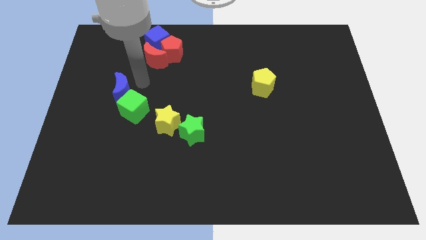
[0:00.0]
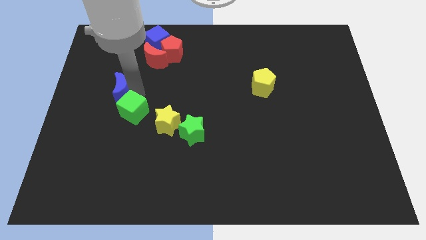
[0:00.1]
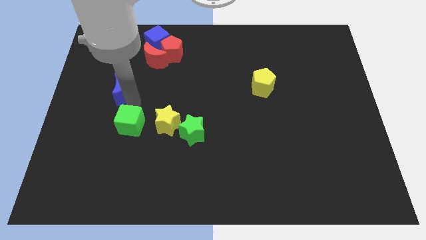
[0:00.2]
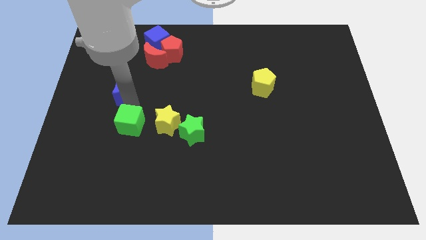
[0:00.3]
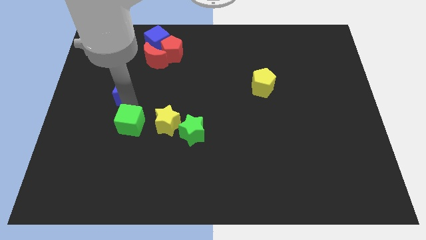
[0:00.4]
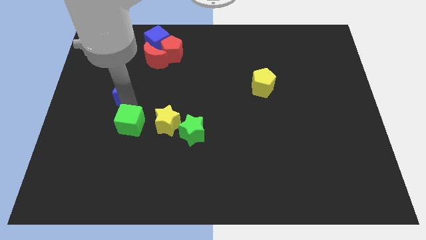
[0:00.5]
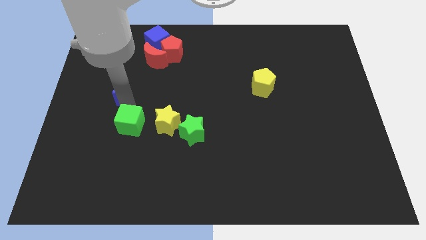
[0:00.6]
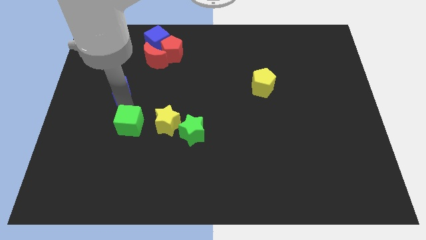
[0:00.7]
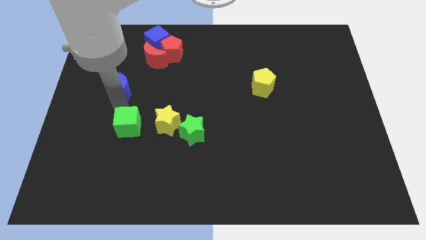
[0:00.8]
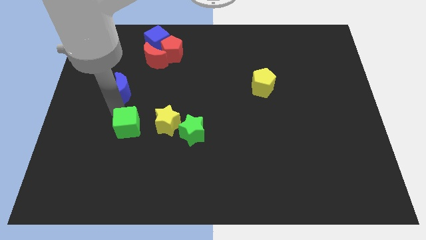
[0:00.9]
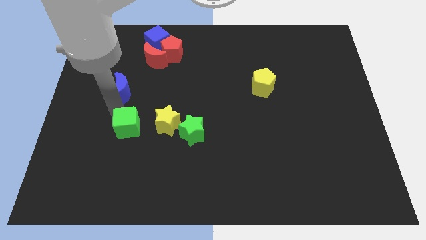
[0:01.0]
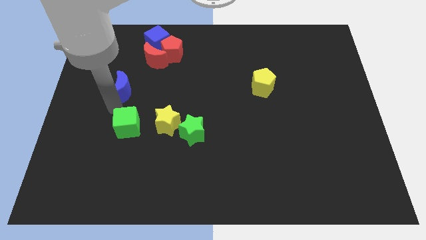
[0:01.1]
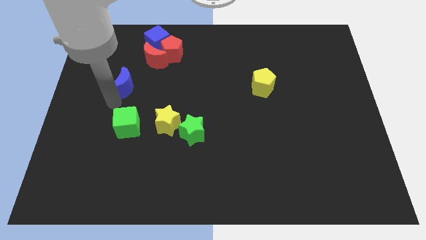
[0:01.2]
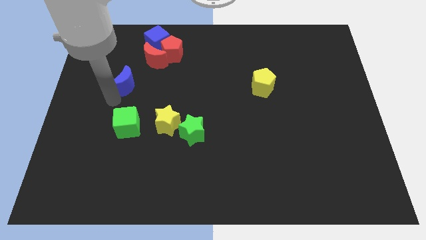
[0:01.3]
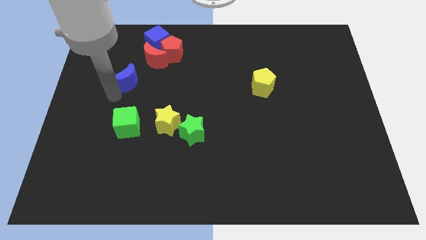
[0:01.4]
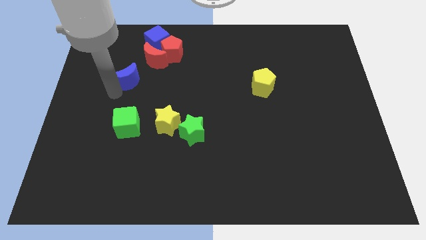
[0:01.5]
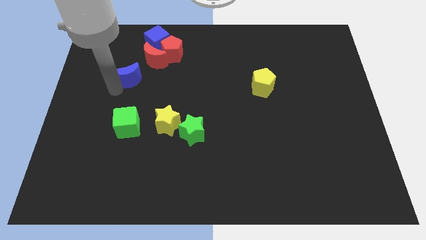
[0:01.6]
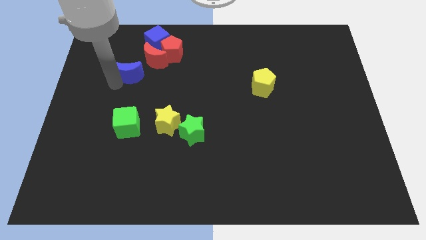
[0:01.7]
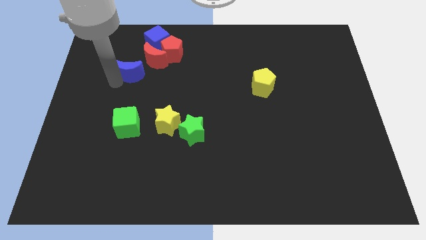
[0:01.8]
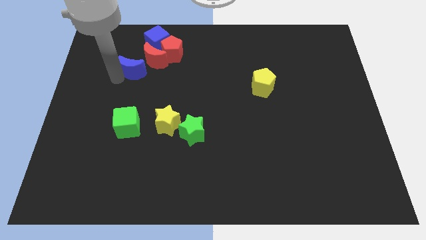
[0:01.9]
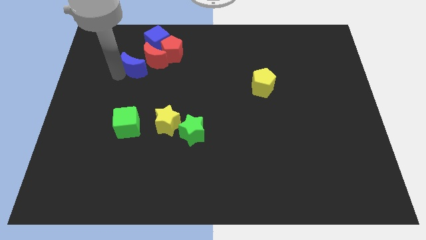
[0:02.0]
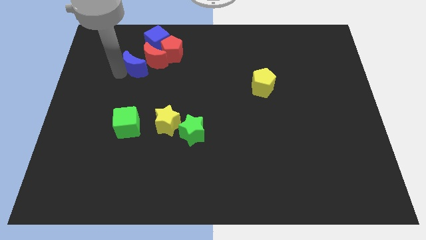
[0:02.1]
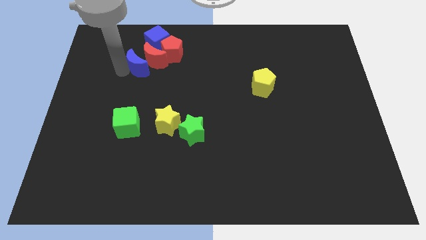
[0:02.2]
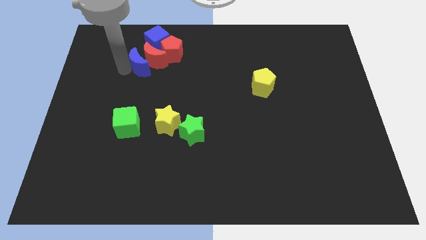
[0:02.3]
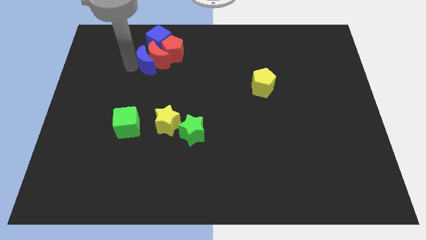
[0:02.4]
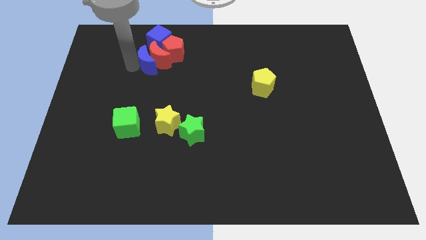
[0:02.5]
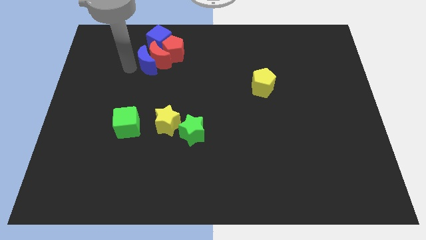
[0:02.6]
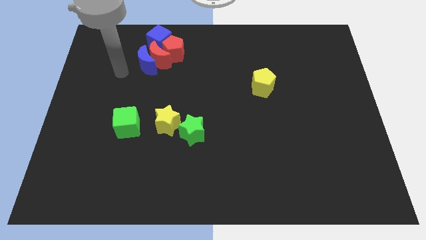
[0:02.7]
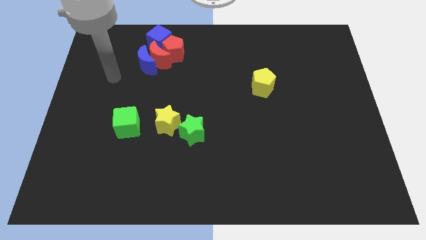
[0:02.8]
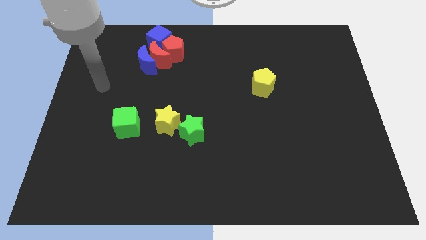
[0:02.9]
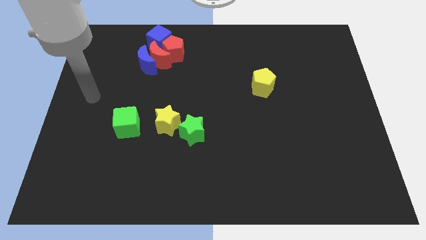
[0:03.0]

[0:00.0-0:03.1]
push the blue moon into red moon

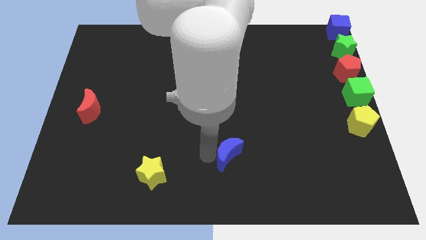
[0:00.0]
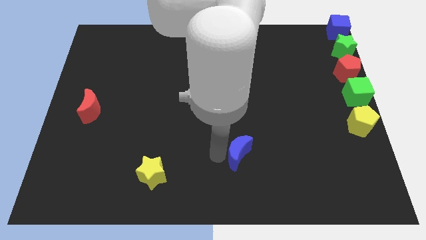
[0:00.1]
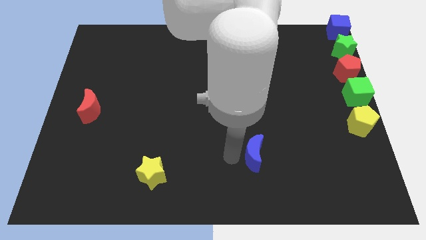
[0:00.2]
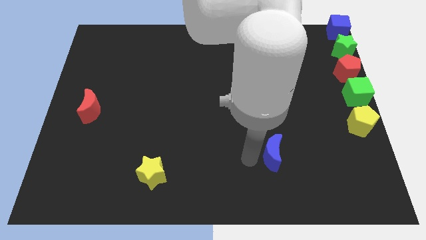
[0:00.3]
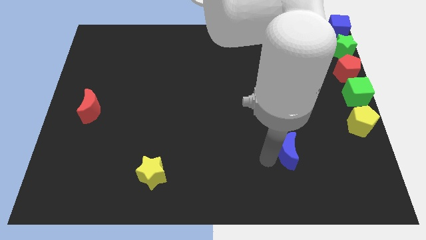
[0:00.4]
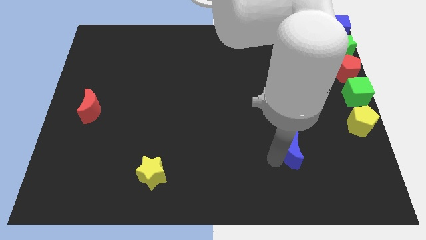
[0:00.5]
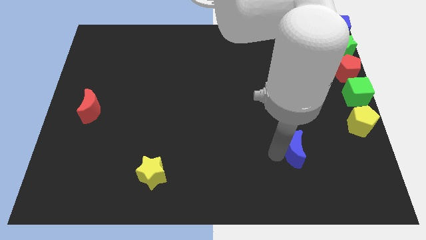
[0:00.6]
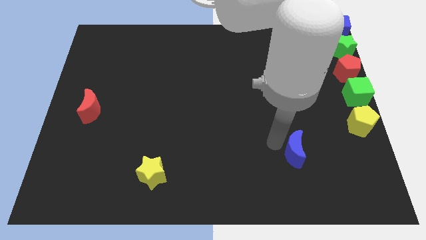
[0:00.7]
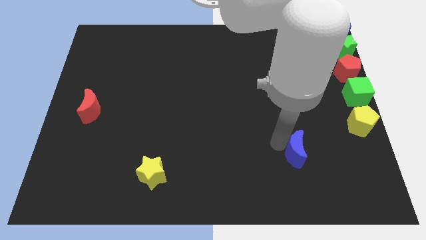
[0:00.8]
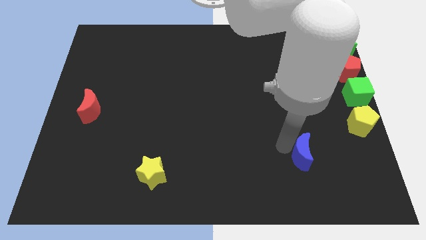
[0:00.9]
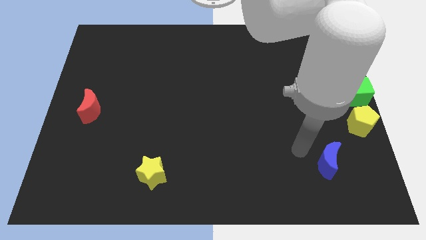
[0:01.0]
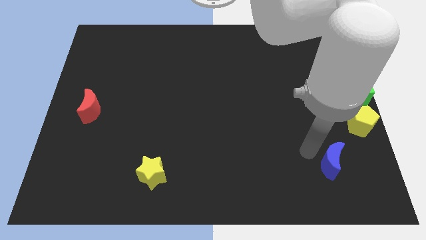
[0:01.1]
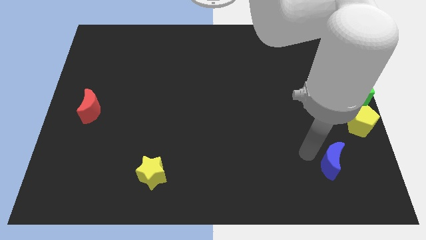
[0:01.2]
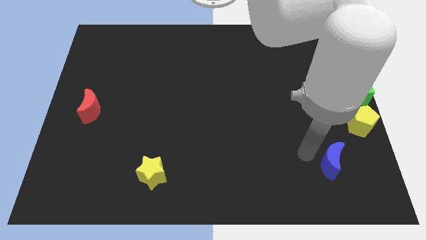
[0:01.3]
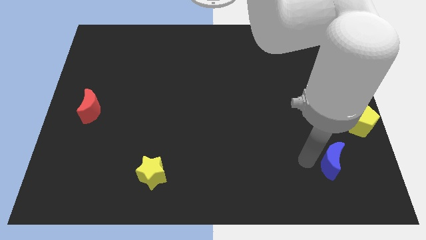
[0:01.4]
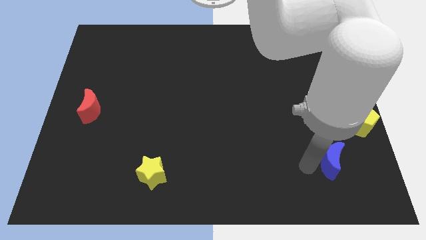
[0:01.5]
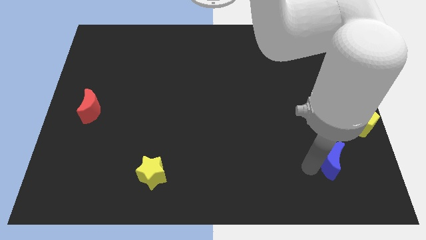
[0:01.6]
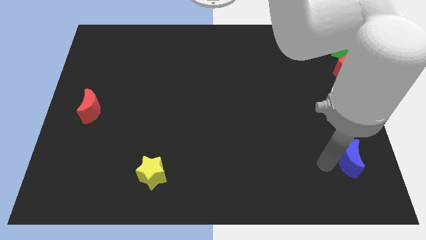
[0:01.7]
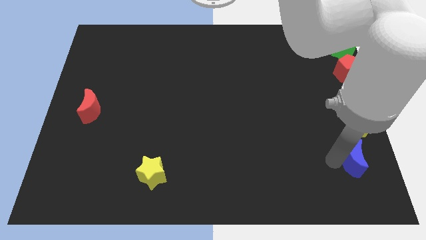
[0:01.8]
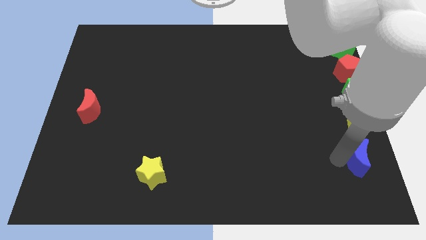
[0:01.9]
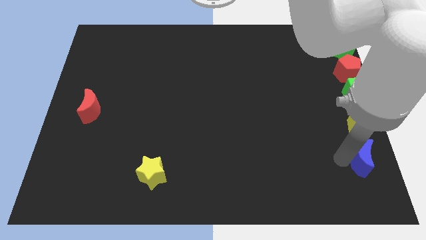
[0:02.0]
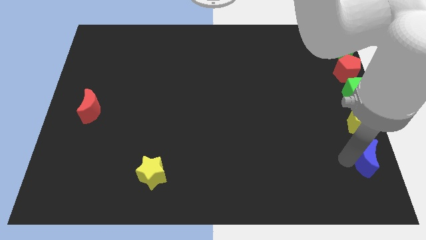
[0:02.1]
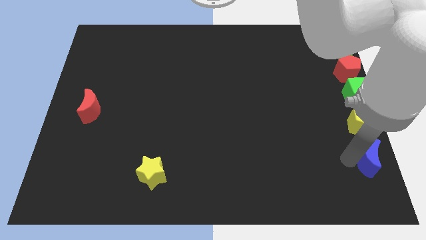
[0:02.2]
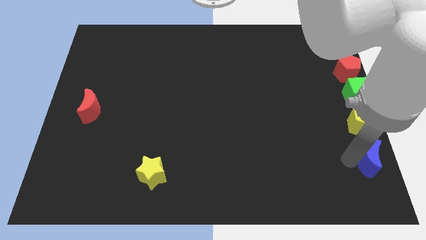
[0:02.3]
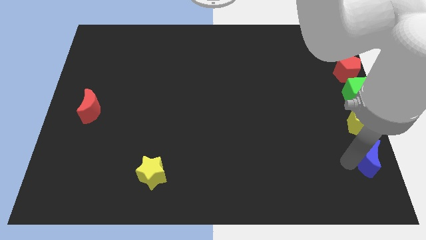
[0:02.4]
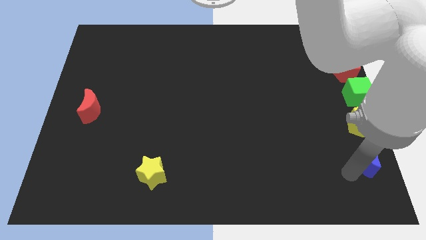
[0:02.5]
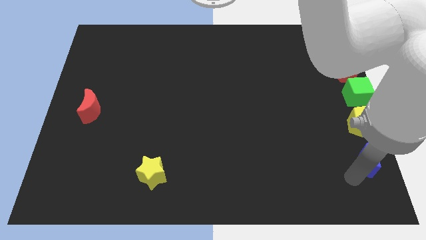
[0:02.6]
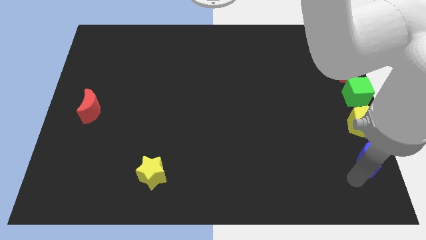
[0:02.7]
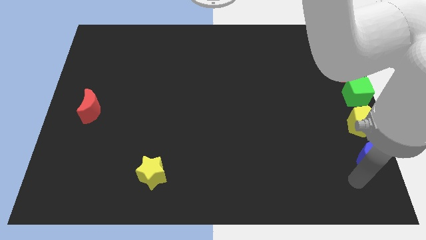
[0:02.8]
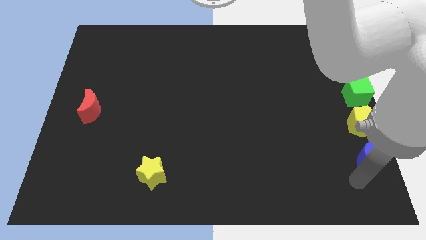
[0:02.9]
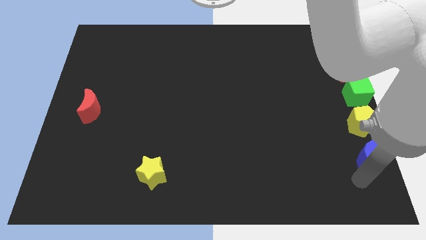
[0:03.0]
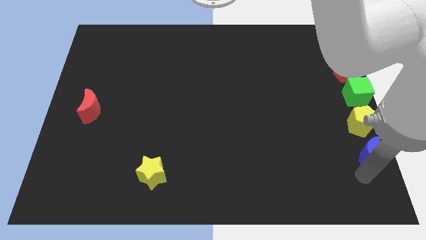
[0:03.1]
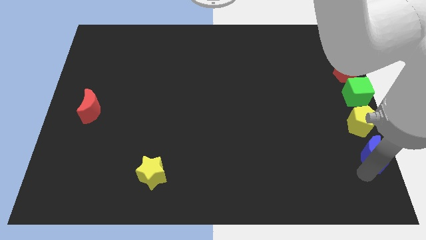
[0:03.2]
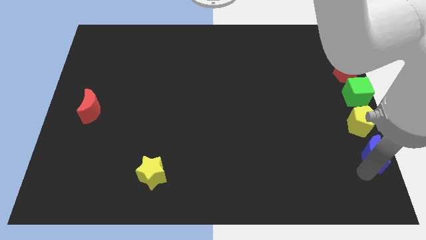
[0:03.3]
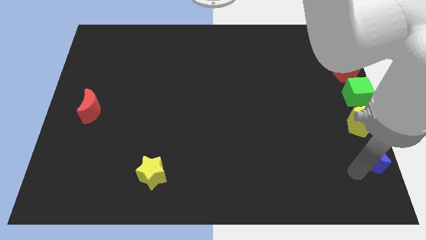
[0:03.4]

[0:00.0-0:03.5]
place the blue moon below the yellow pentagon

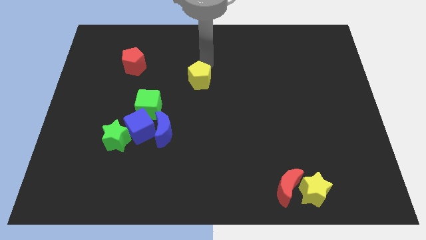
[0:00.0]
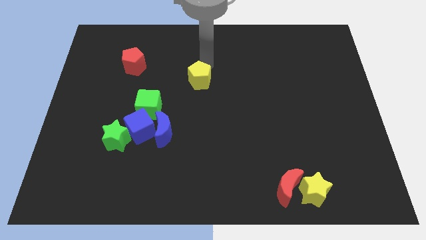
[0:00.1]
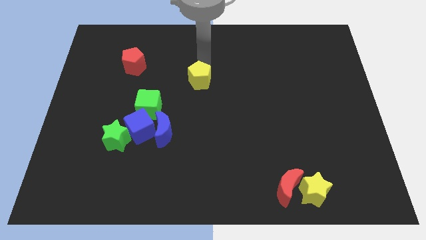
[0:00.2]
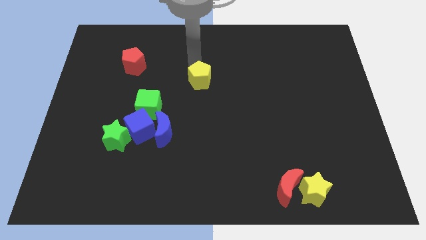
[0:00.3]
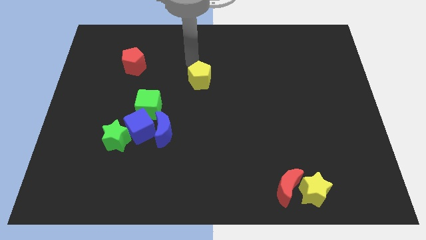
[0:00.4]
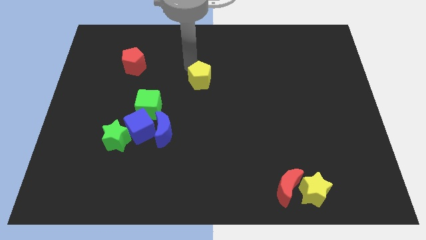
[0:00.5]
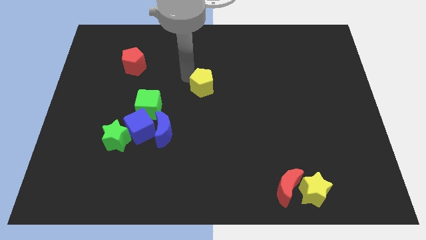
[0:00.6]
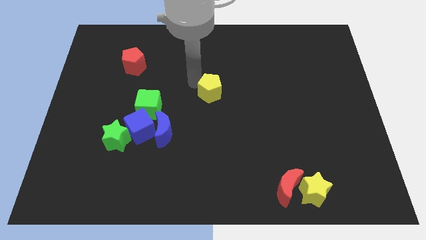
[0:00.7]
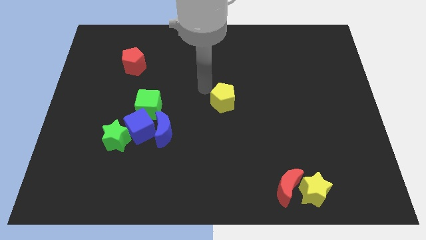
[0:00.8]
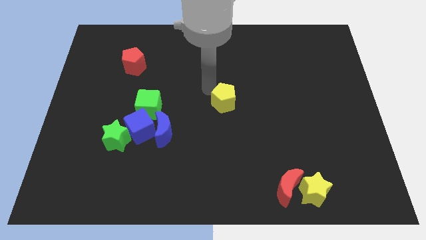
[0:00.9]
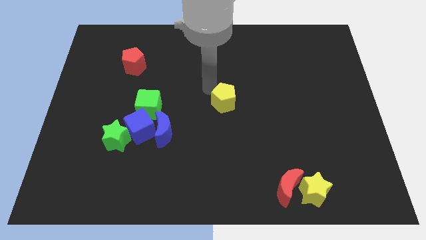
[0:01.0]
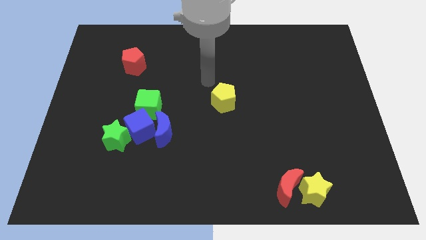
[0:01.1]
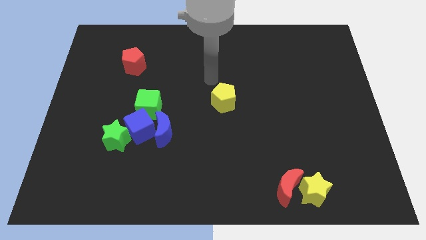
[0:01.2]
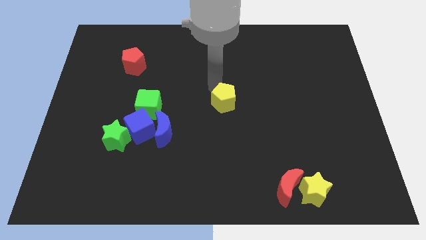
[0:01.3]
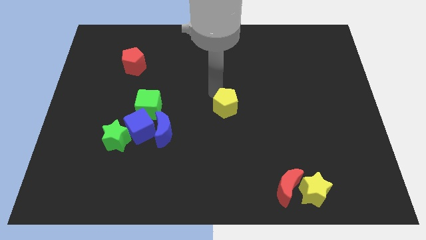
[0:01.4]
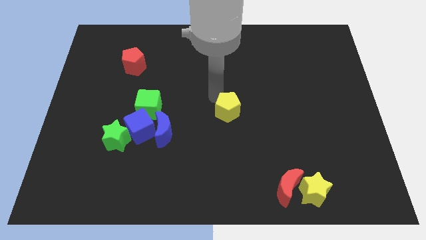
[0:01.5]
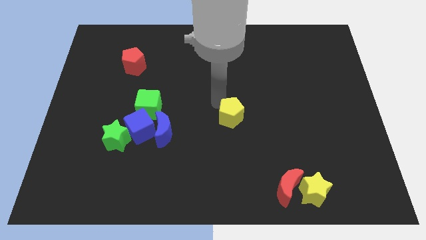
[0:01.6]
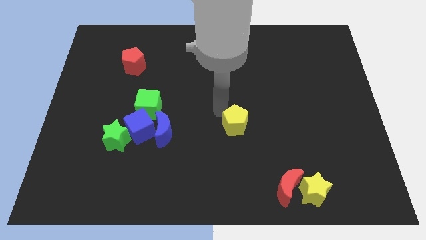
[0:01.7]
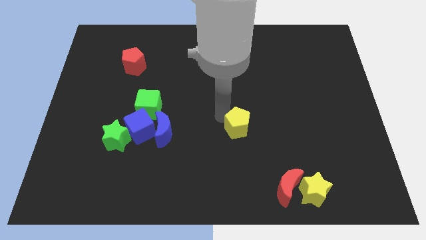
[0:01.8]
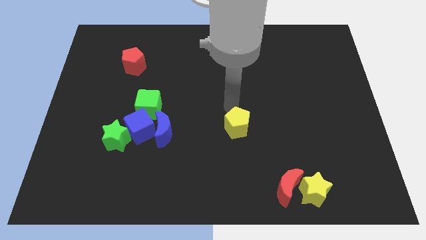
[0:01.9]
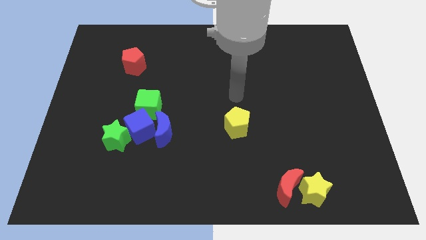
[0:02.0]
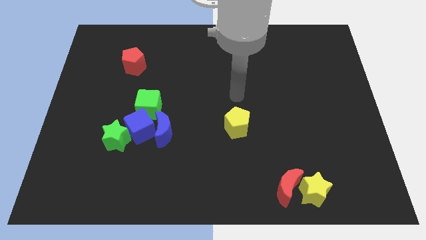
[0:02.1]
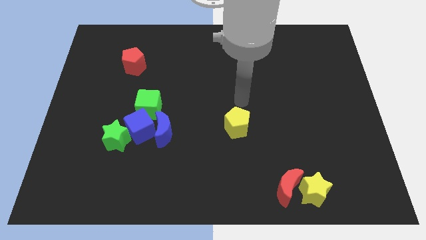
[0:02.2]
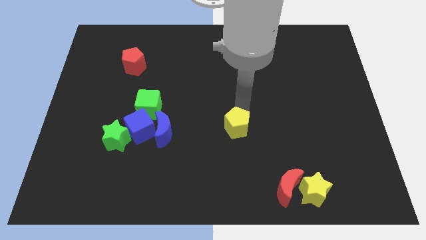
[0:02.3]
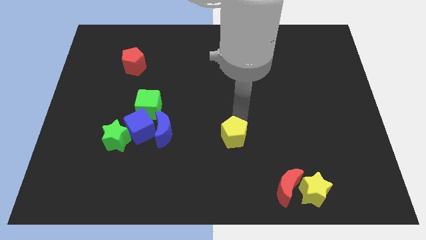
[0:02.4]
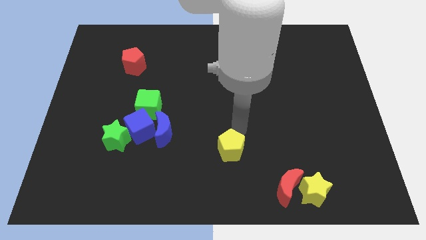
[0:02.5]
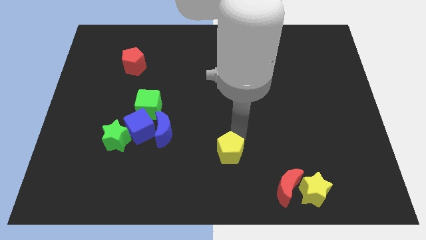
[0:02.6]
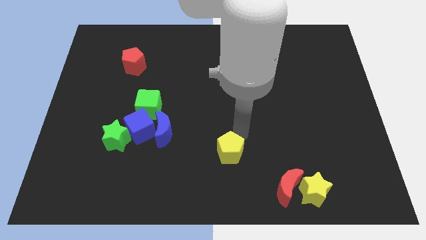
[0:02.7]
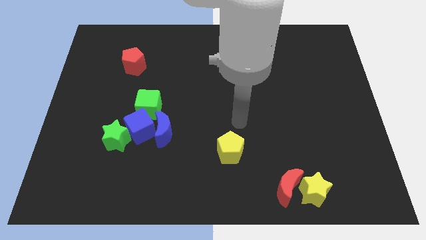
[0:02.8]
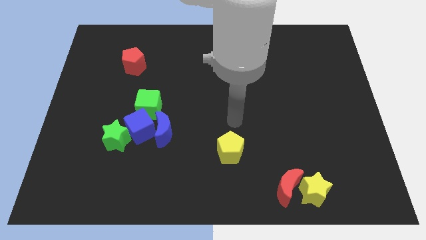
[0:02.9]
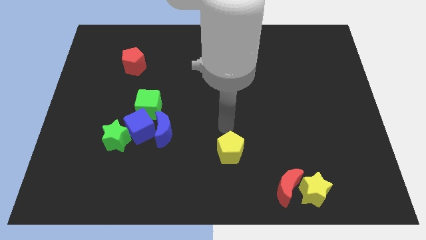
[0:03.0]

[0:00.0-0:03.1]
push yellow pentagon towards the bottom center
